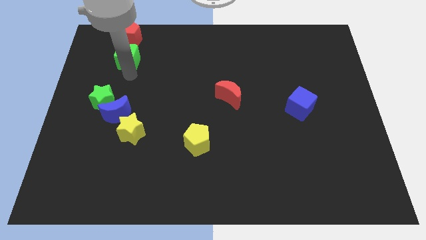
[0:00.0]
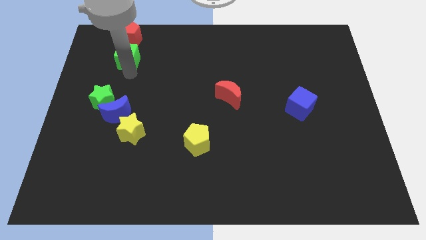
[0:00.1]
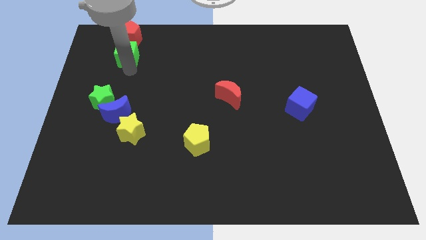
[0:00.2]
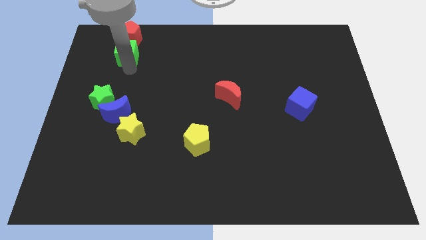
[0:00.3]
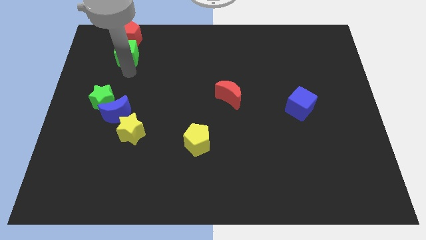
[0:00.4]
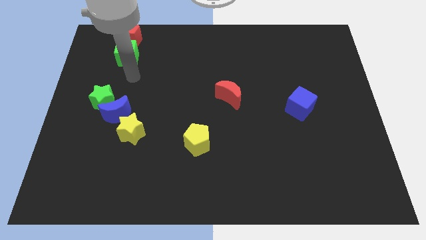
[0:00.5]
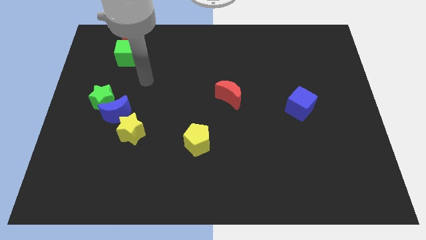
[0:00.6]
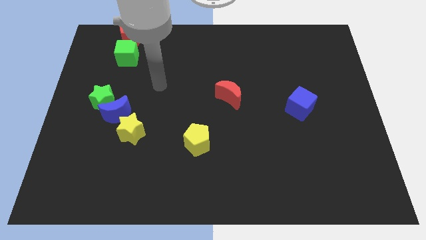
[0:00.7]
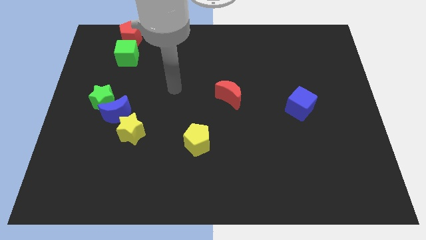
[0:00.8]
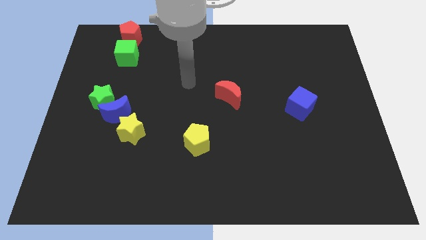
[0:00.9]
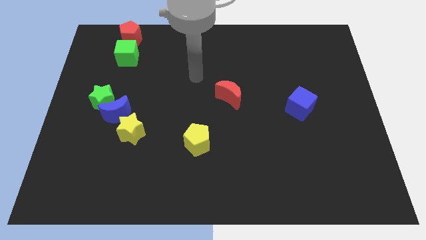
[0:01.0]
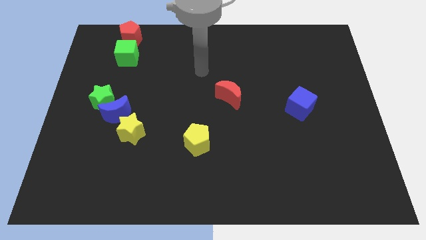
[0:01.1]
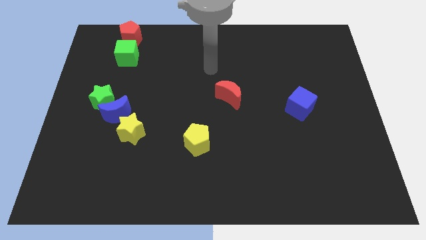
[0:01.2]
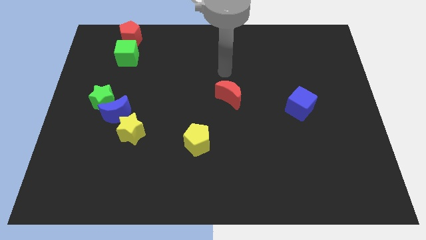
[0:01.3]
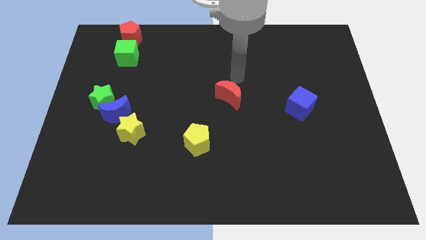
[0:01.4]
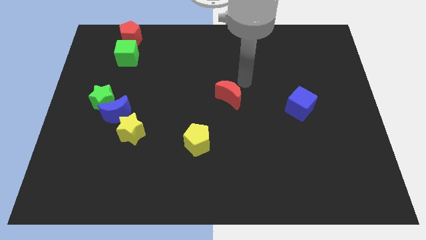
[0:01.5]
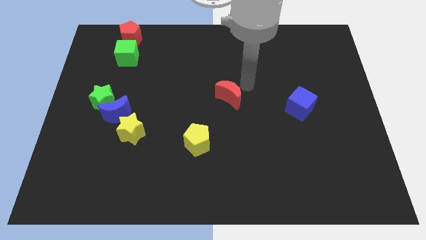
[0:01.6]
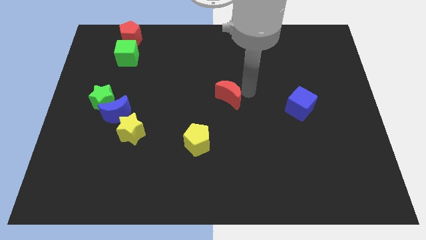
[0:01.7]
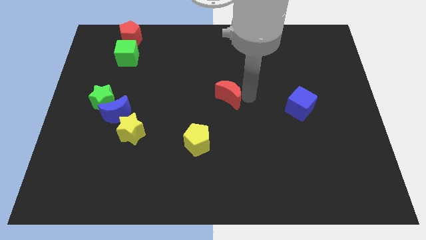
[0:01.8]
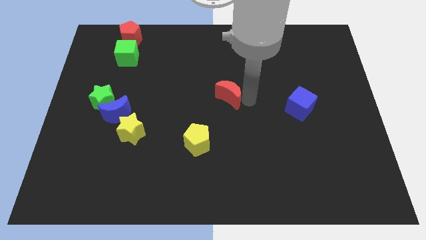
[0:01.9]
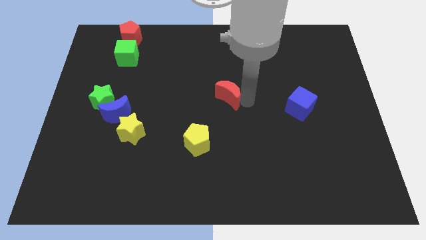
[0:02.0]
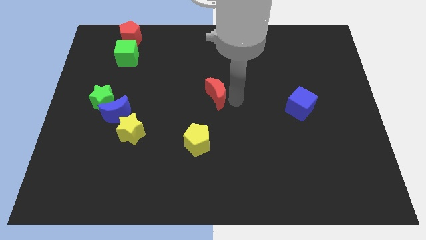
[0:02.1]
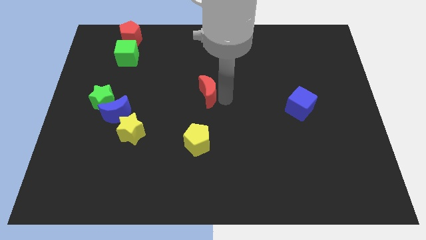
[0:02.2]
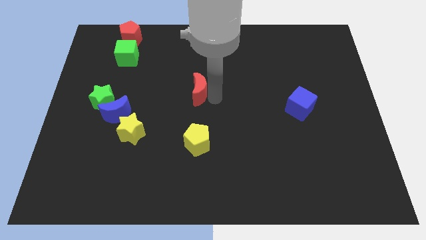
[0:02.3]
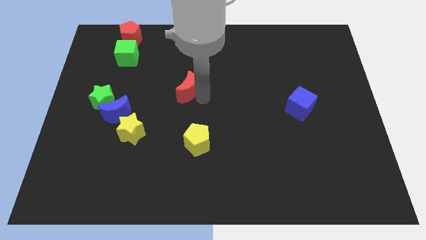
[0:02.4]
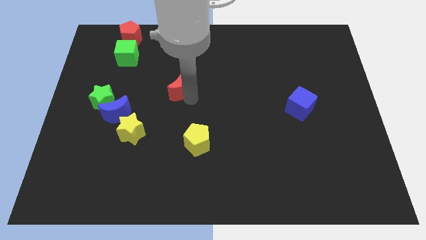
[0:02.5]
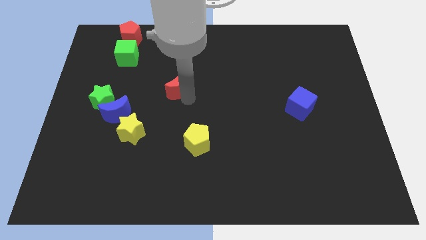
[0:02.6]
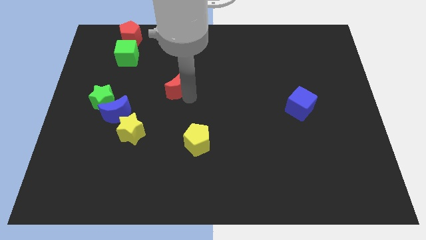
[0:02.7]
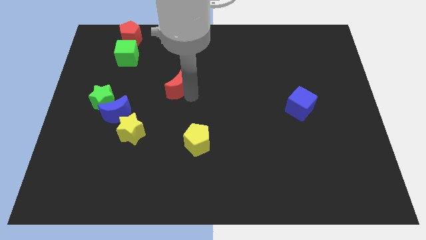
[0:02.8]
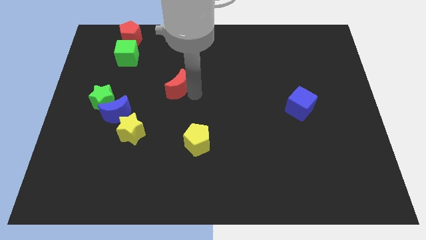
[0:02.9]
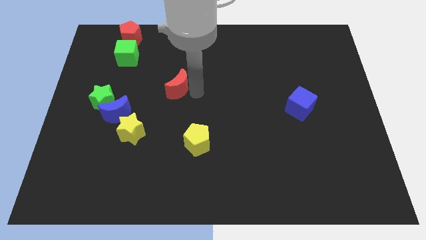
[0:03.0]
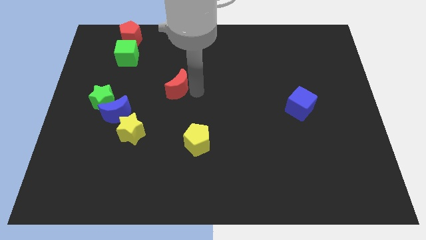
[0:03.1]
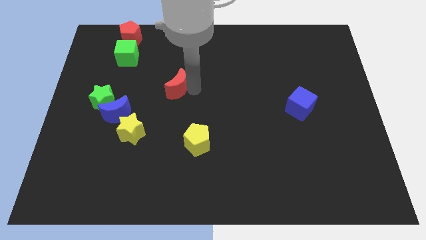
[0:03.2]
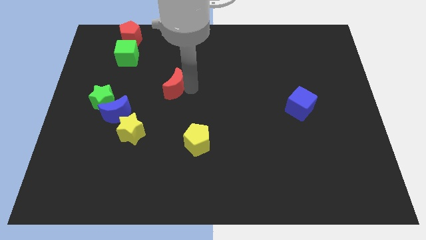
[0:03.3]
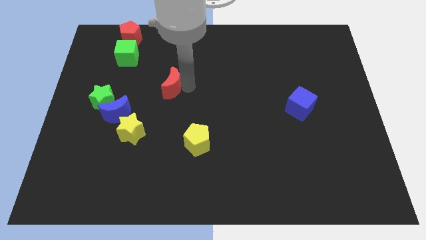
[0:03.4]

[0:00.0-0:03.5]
move your arm away from the green cube

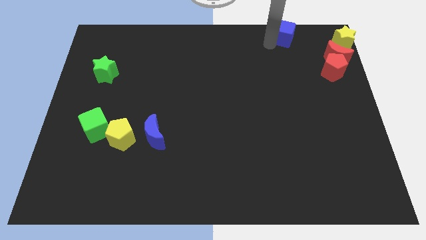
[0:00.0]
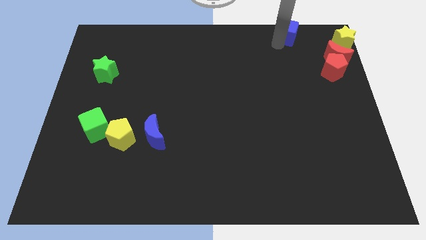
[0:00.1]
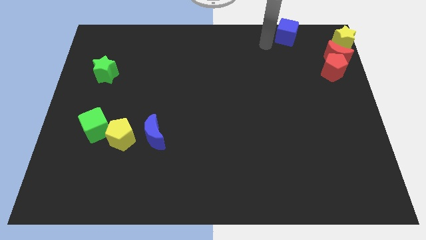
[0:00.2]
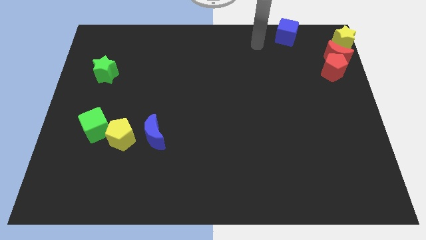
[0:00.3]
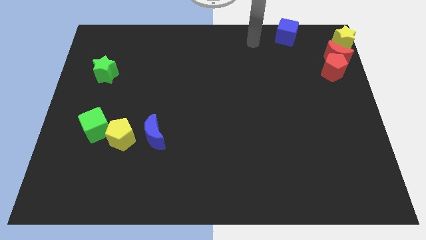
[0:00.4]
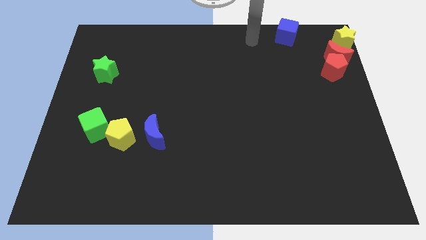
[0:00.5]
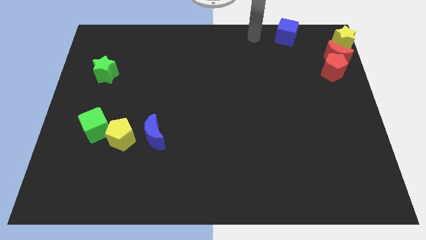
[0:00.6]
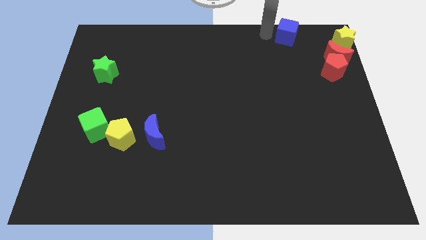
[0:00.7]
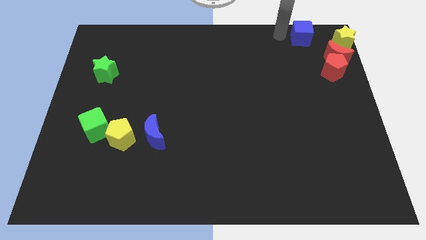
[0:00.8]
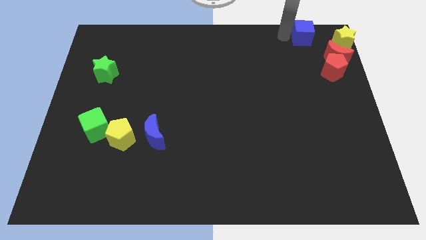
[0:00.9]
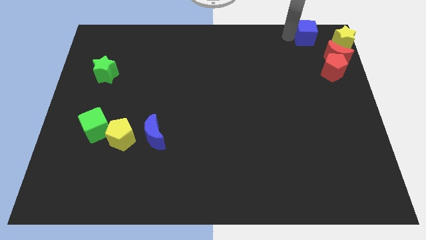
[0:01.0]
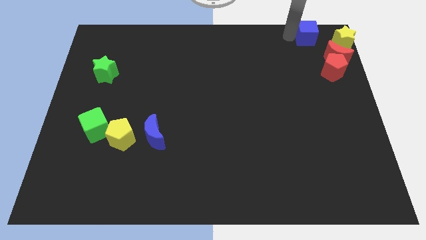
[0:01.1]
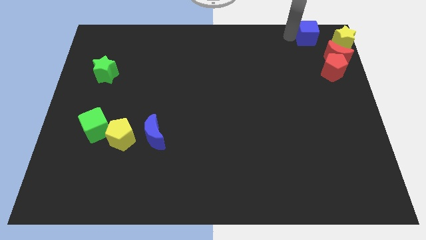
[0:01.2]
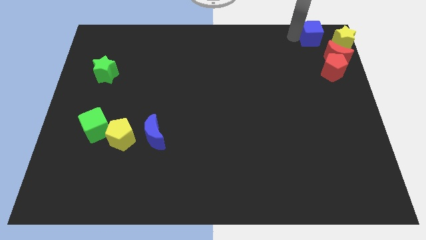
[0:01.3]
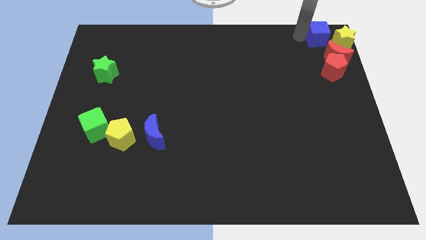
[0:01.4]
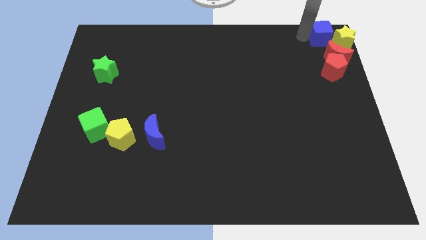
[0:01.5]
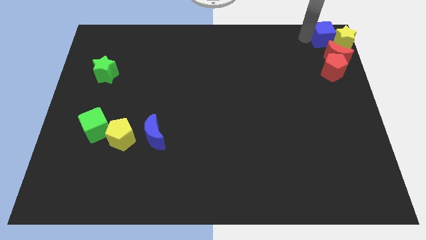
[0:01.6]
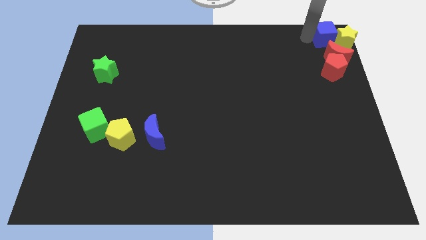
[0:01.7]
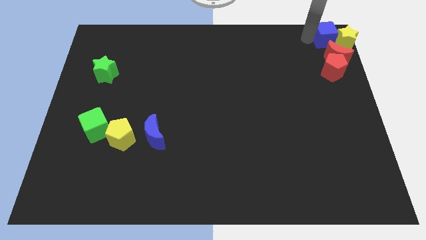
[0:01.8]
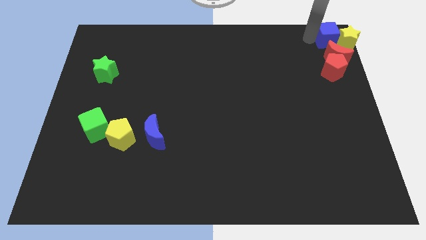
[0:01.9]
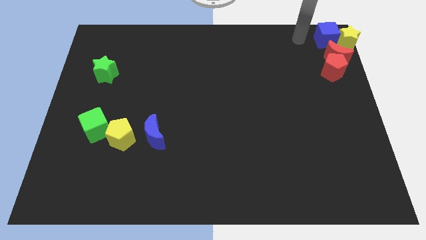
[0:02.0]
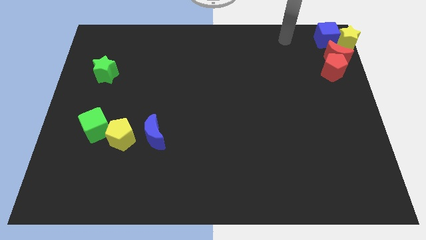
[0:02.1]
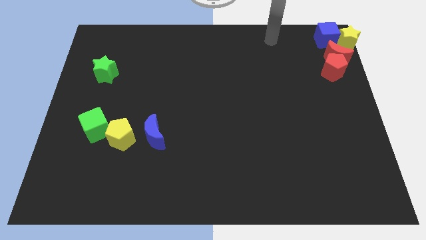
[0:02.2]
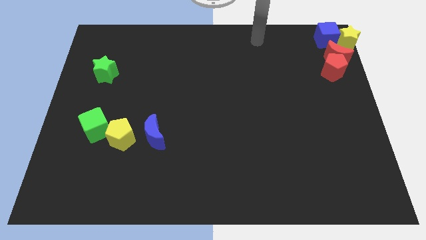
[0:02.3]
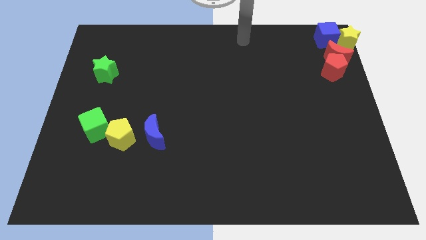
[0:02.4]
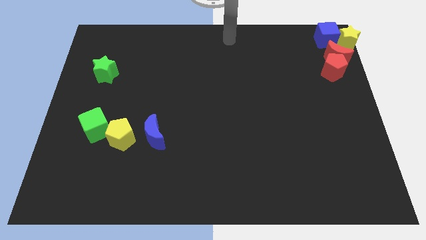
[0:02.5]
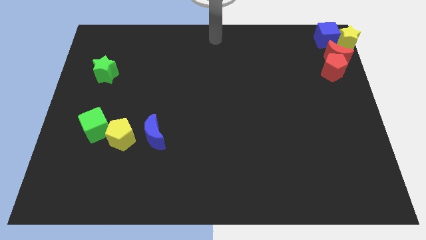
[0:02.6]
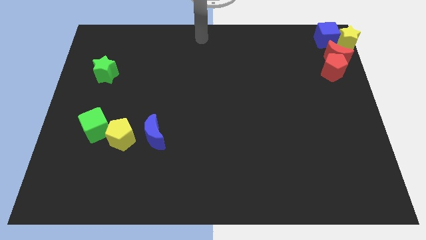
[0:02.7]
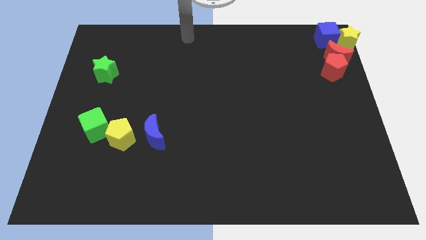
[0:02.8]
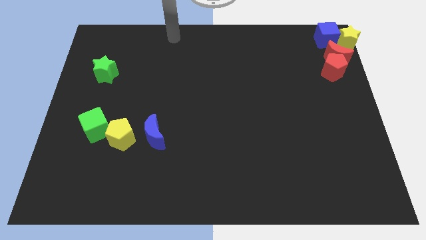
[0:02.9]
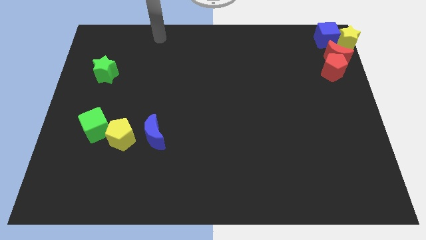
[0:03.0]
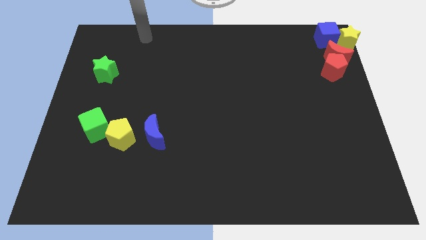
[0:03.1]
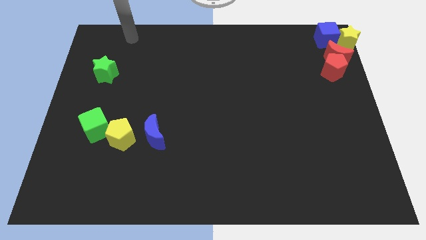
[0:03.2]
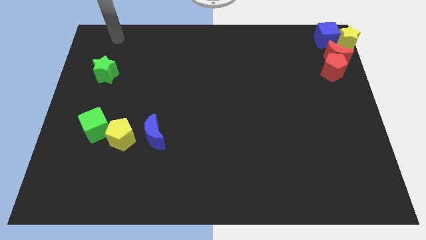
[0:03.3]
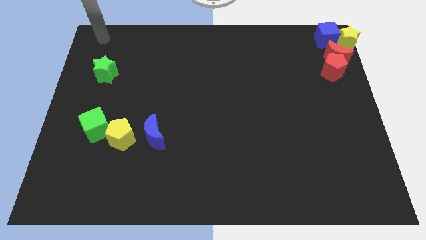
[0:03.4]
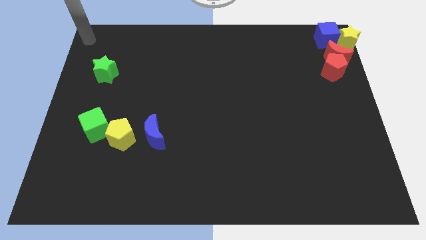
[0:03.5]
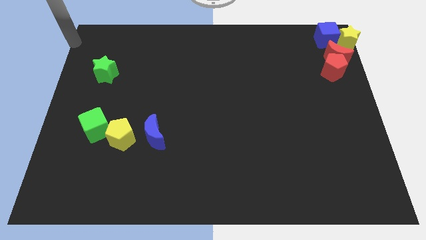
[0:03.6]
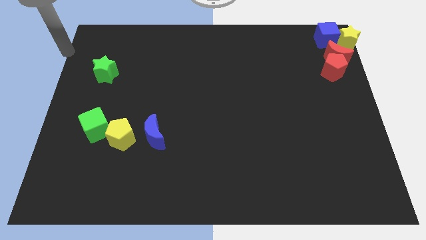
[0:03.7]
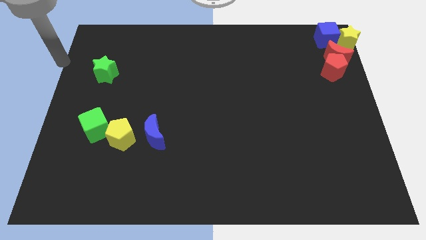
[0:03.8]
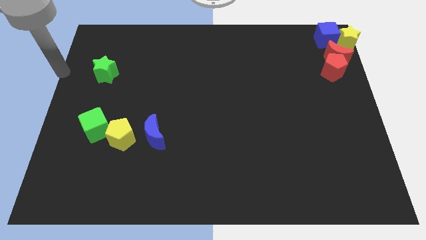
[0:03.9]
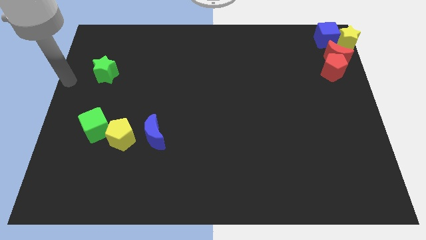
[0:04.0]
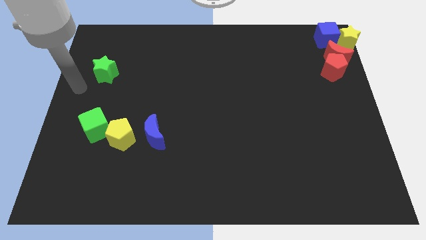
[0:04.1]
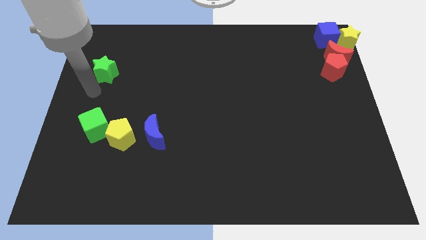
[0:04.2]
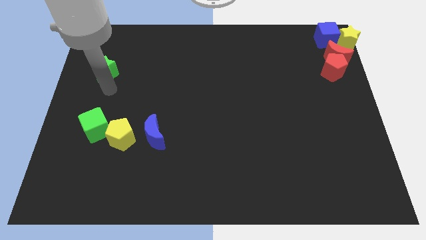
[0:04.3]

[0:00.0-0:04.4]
place your arm to the bottom of green star

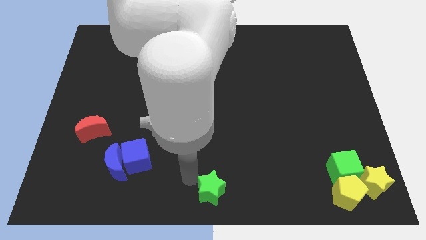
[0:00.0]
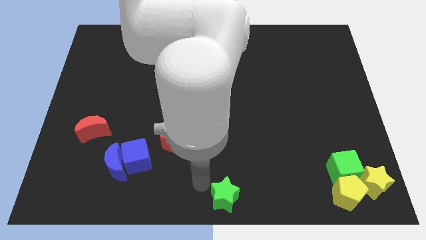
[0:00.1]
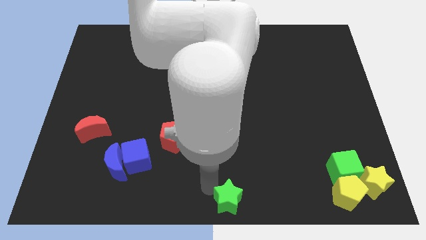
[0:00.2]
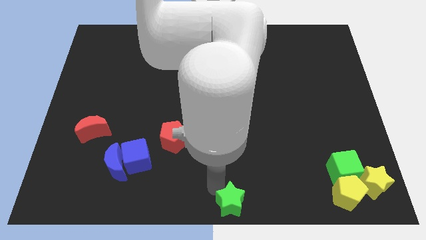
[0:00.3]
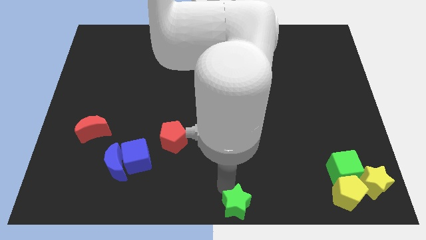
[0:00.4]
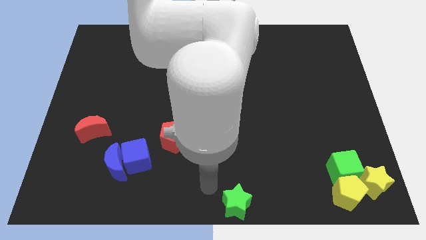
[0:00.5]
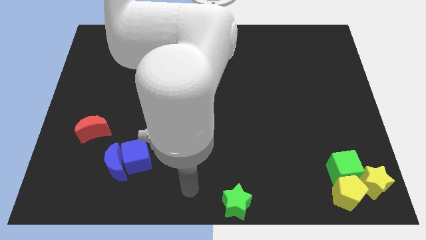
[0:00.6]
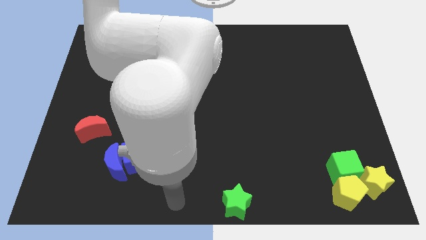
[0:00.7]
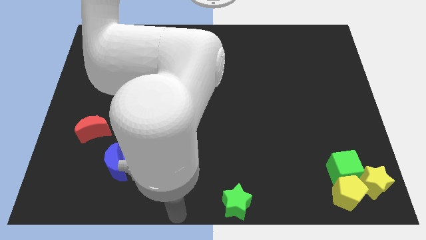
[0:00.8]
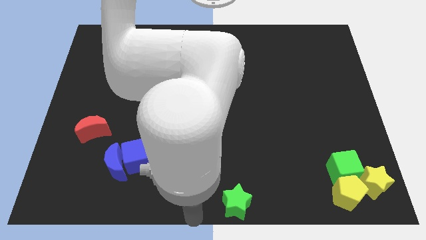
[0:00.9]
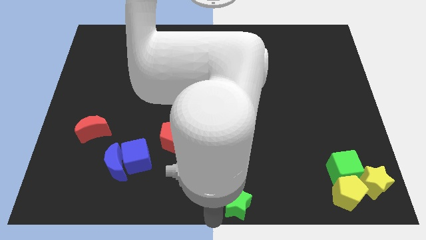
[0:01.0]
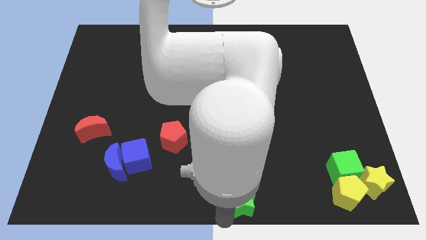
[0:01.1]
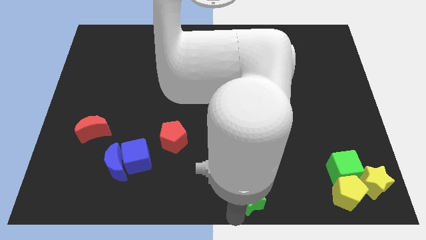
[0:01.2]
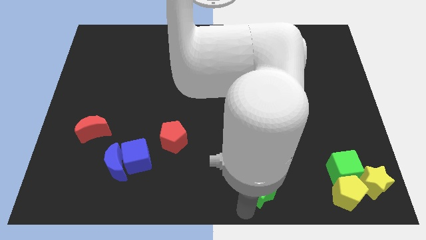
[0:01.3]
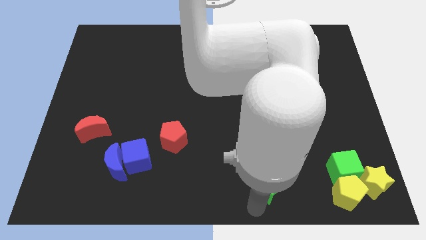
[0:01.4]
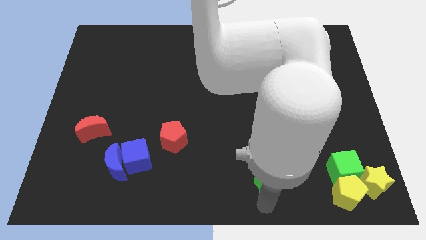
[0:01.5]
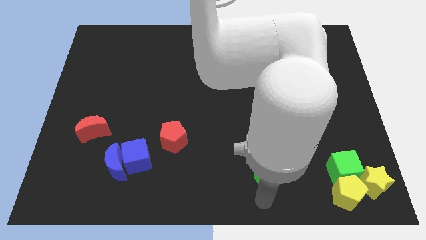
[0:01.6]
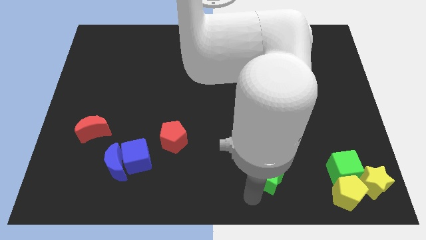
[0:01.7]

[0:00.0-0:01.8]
move the green star to the left of the green cube
